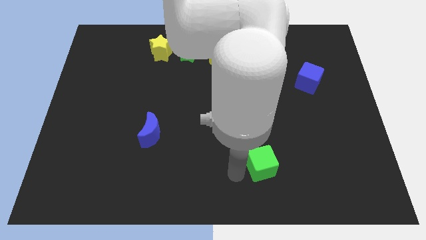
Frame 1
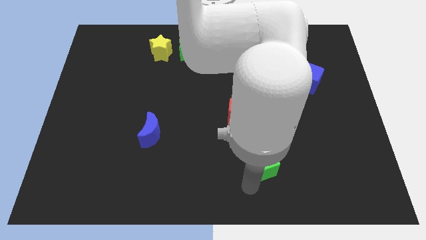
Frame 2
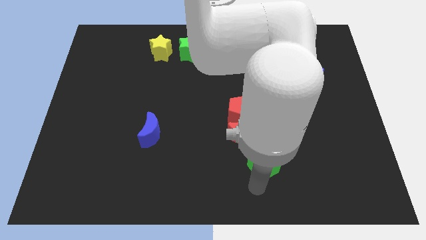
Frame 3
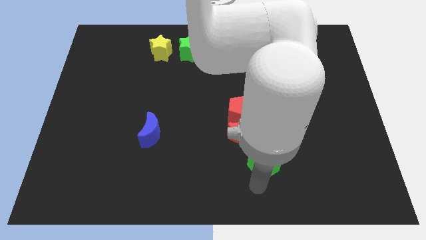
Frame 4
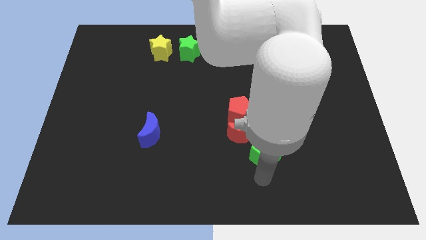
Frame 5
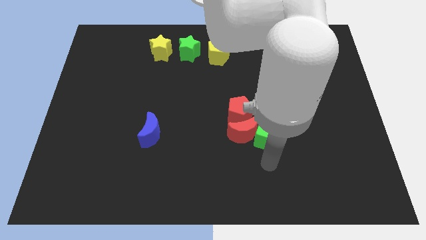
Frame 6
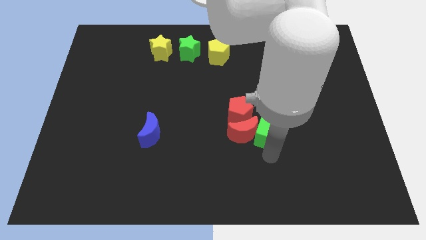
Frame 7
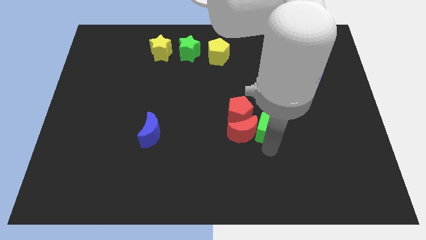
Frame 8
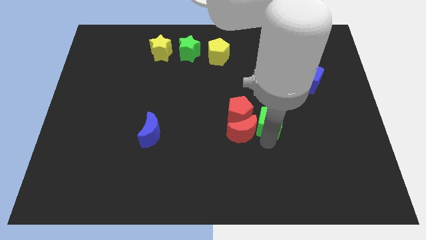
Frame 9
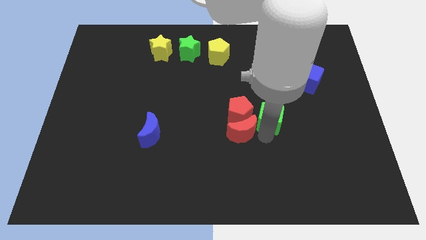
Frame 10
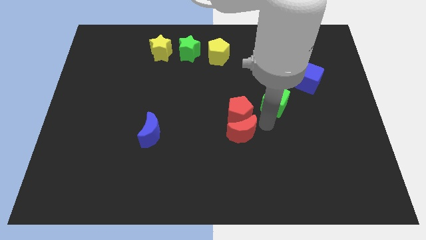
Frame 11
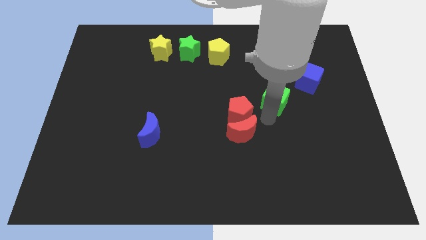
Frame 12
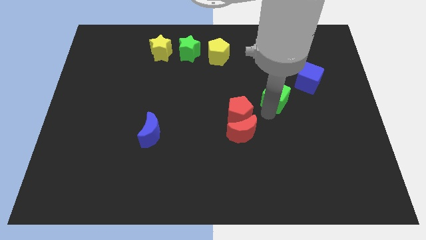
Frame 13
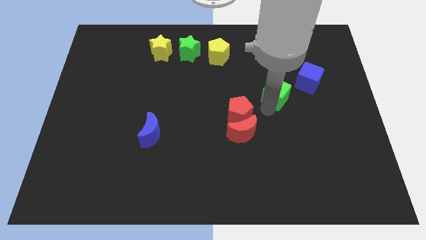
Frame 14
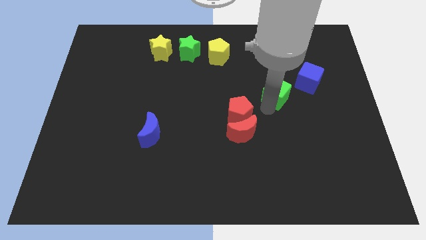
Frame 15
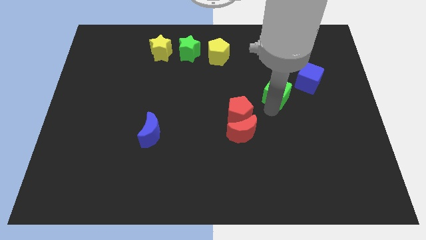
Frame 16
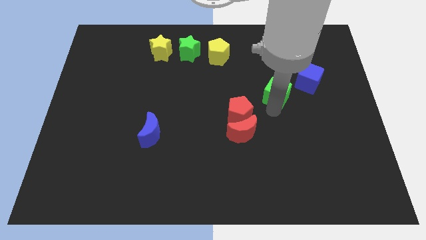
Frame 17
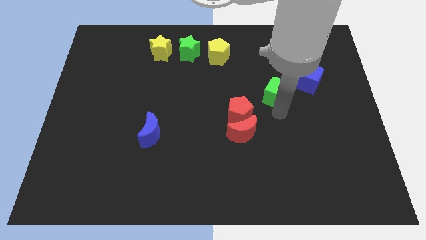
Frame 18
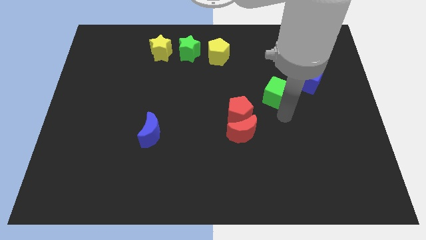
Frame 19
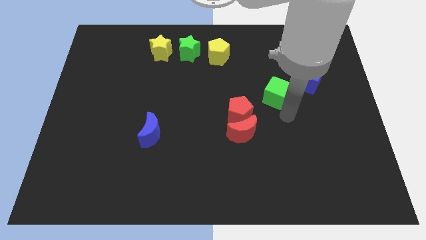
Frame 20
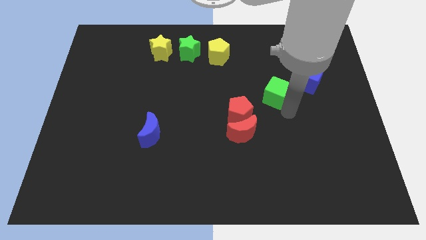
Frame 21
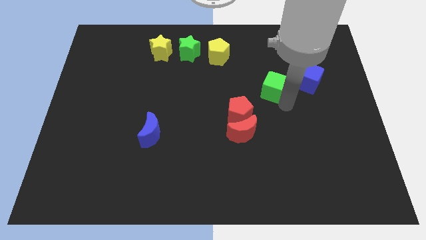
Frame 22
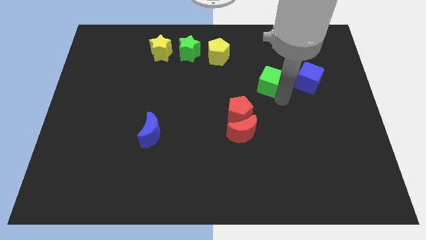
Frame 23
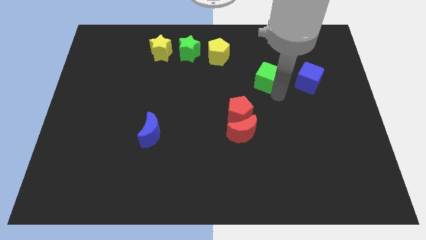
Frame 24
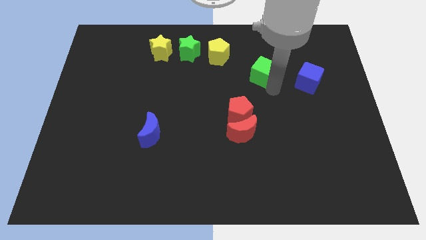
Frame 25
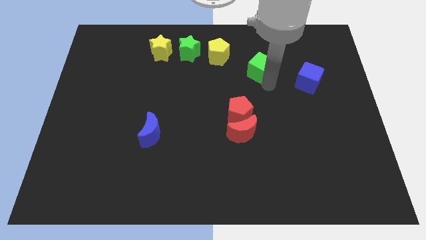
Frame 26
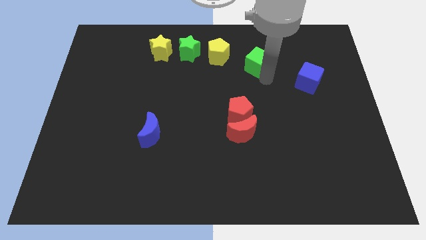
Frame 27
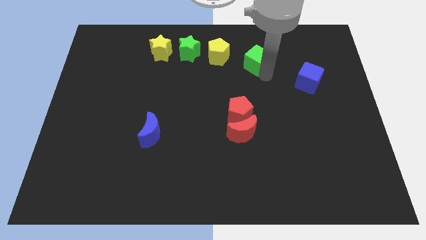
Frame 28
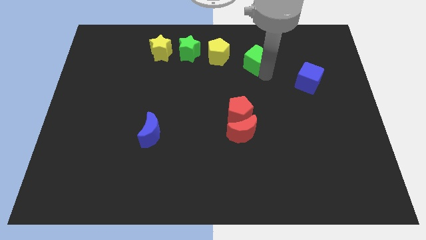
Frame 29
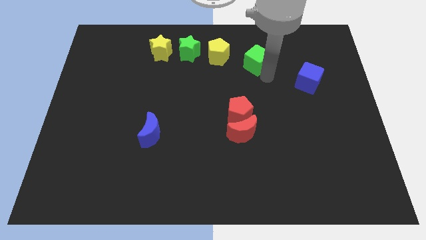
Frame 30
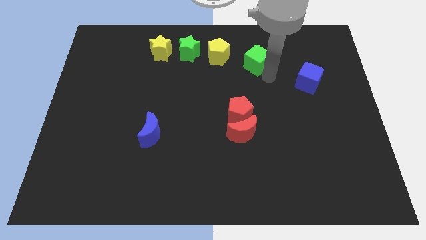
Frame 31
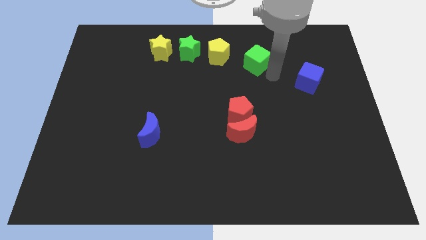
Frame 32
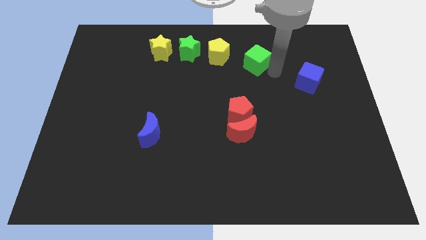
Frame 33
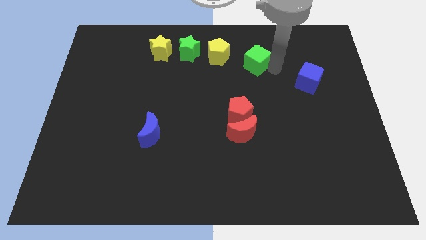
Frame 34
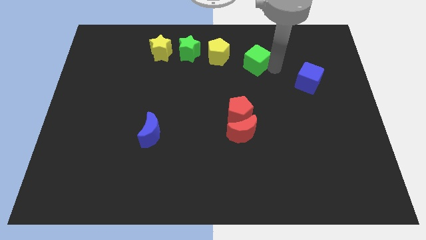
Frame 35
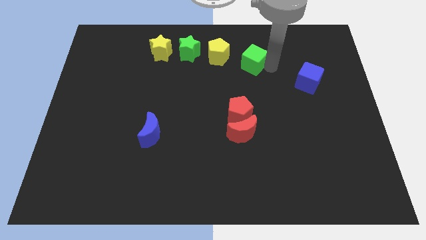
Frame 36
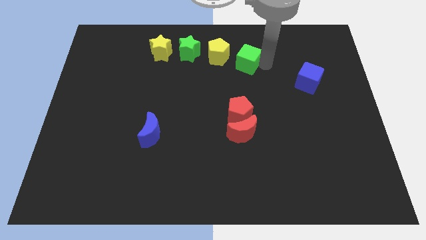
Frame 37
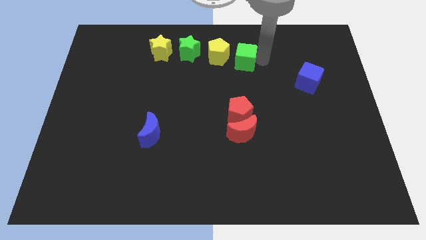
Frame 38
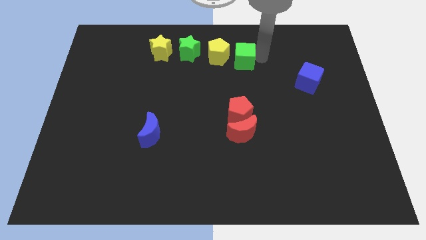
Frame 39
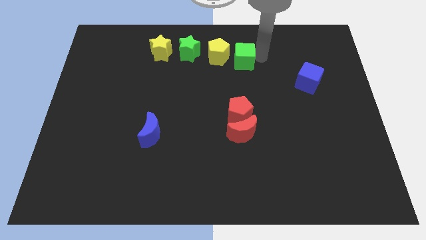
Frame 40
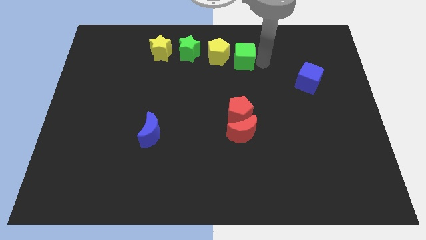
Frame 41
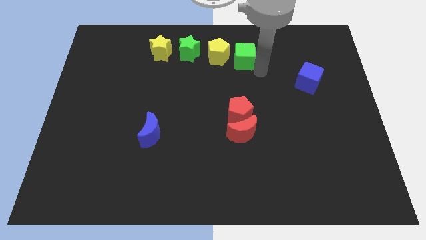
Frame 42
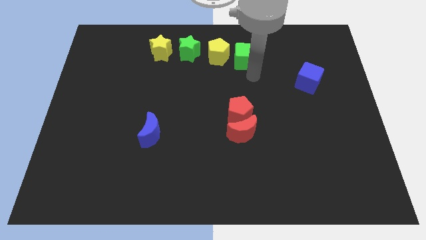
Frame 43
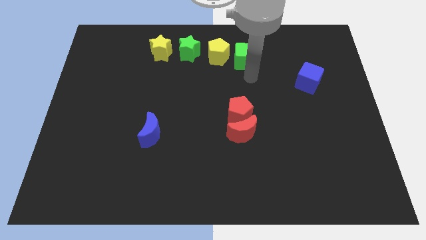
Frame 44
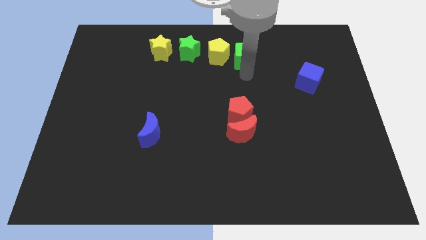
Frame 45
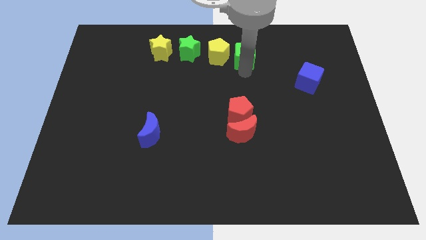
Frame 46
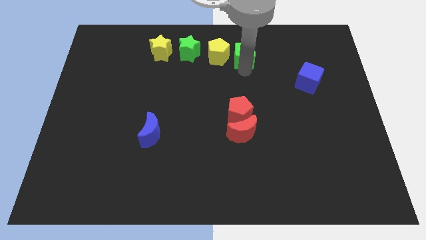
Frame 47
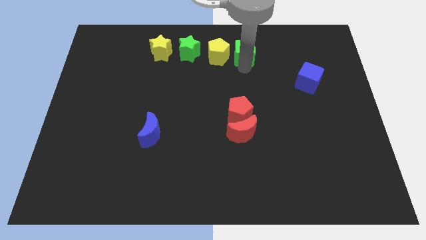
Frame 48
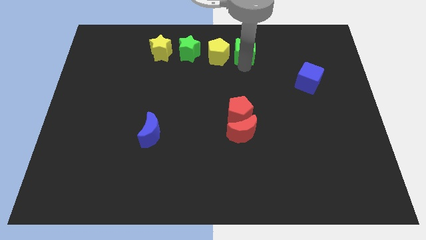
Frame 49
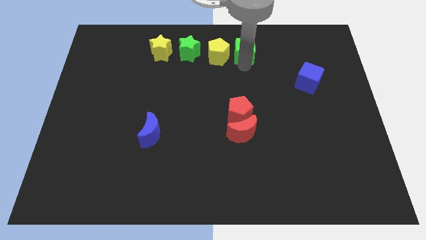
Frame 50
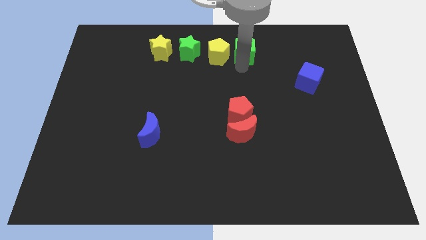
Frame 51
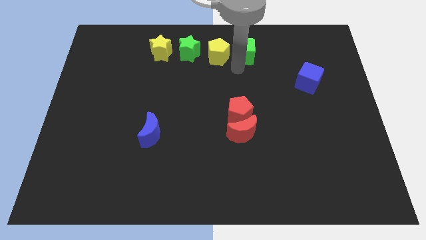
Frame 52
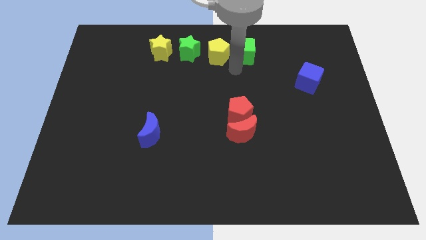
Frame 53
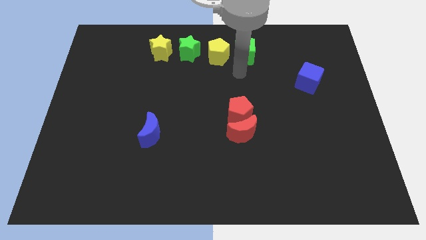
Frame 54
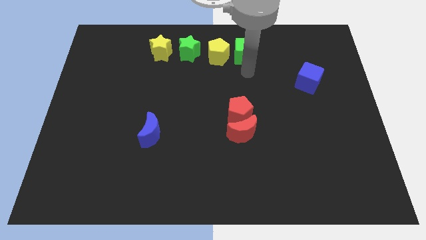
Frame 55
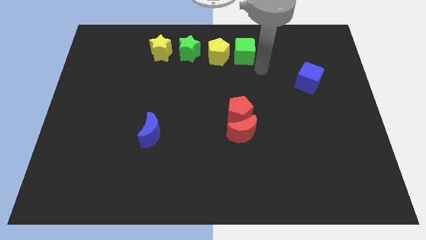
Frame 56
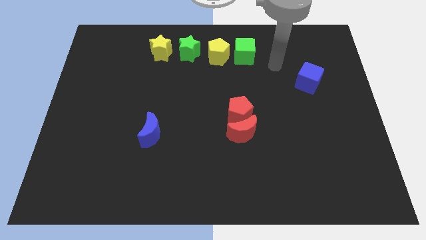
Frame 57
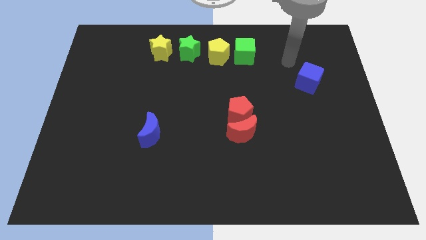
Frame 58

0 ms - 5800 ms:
slide the green cube to the right side of the yellow pentagon

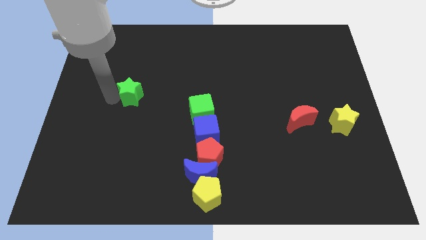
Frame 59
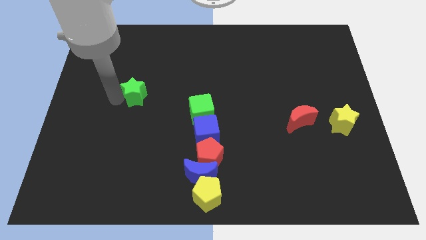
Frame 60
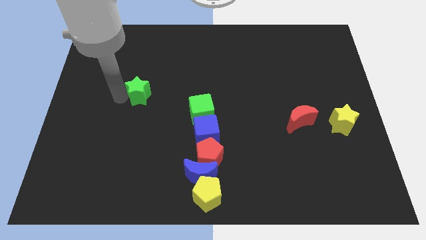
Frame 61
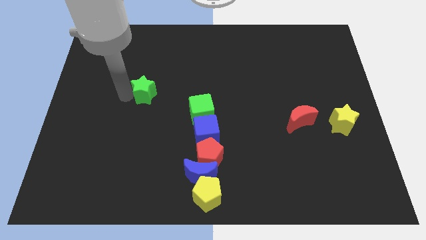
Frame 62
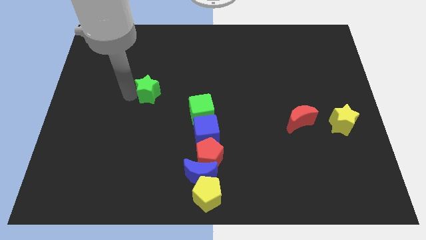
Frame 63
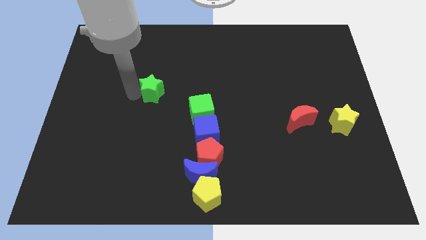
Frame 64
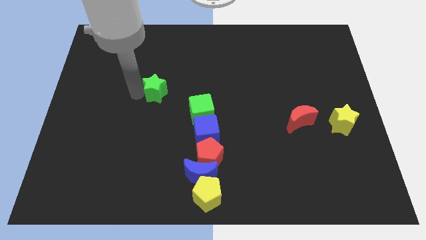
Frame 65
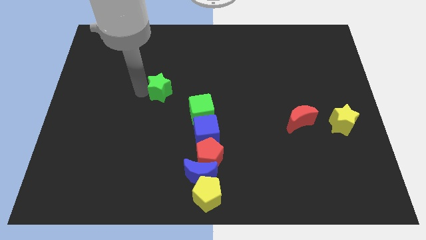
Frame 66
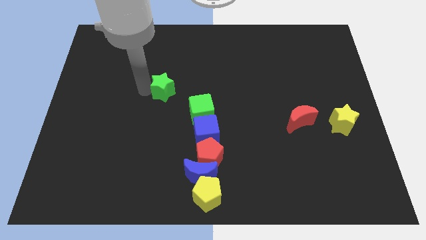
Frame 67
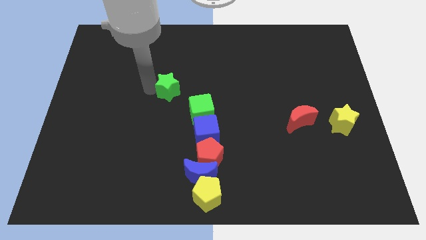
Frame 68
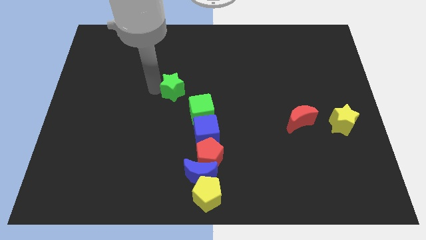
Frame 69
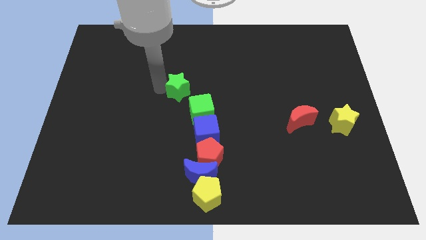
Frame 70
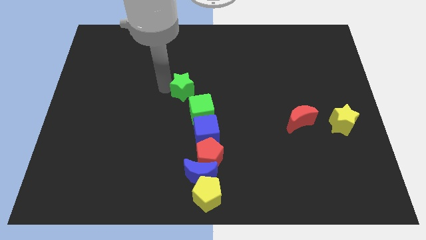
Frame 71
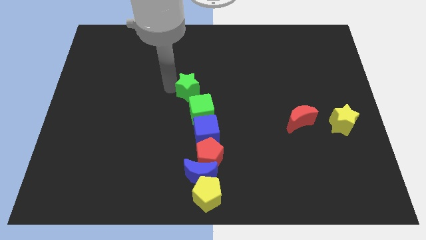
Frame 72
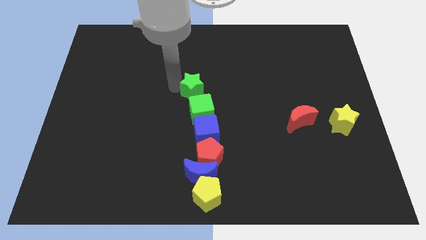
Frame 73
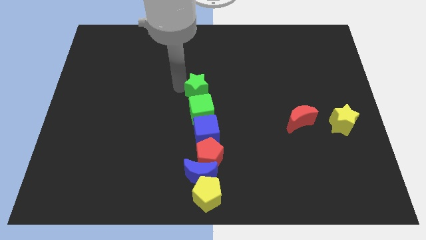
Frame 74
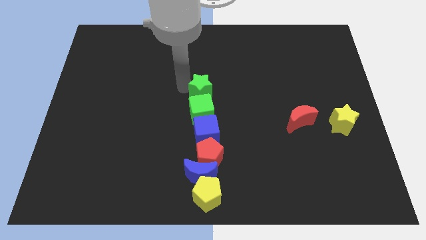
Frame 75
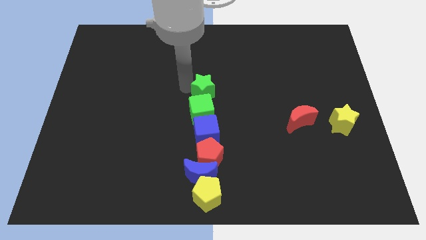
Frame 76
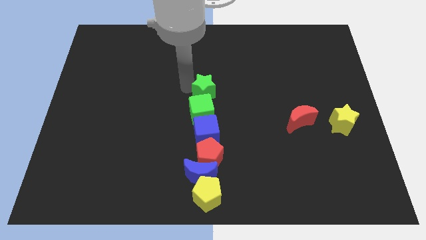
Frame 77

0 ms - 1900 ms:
place the green star above the green cube

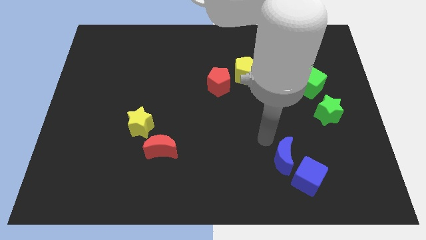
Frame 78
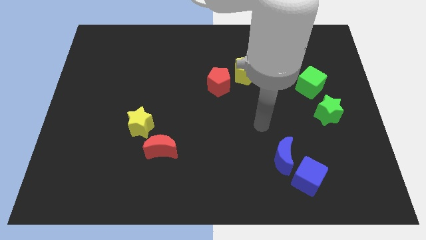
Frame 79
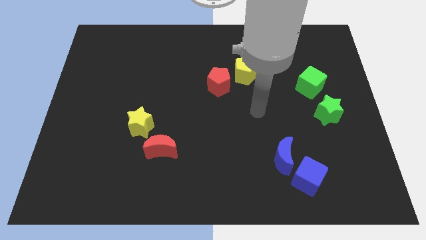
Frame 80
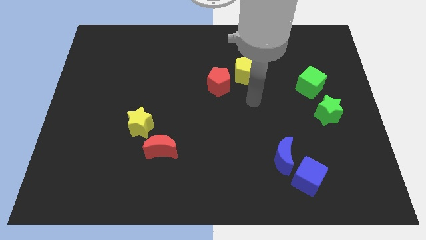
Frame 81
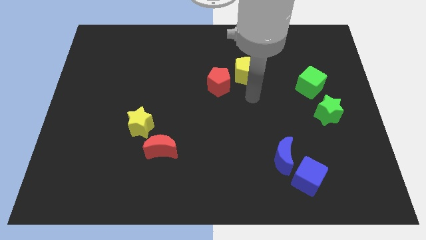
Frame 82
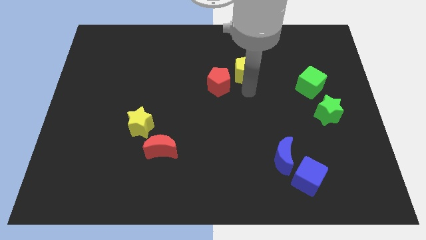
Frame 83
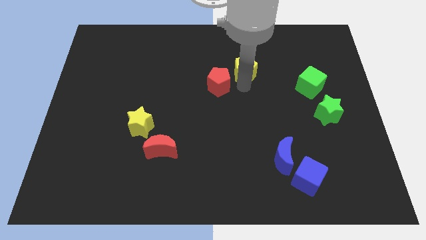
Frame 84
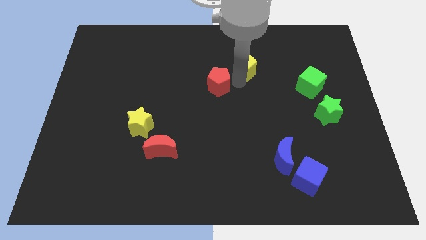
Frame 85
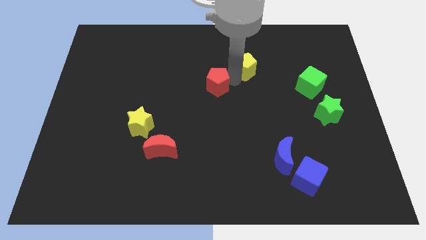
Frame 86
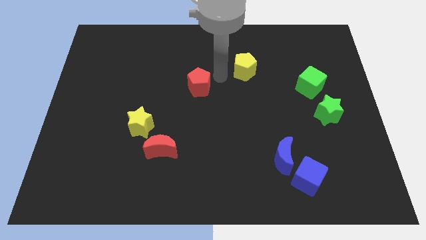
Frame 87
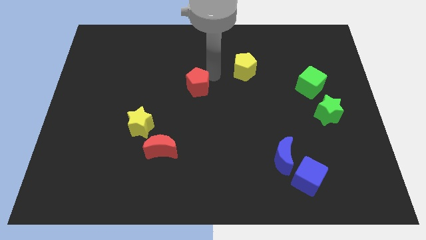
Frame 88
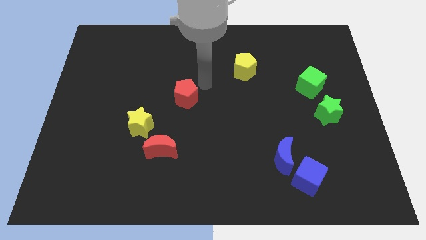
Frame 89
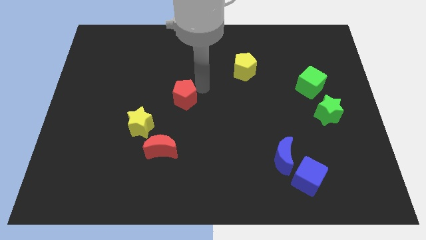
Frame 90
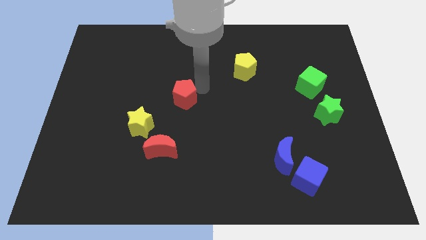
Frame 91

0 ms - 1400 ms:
move the red pentagon away from the yellow pentagon
